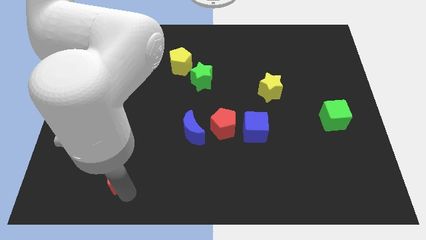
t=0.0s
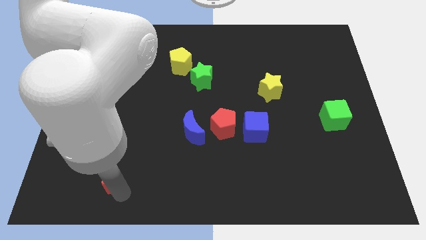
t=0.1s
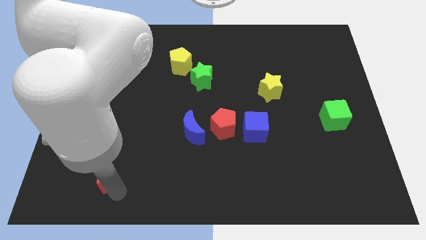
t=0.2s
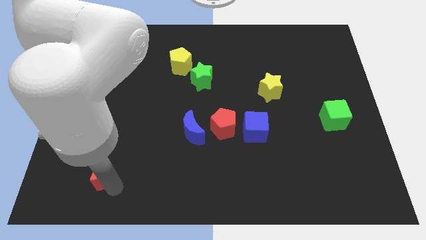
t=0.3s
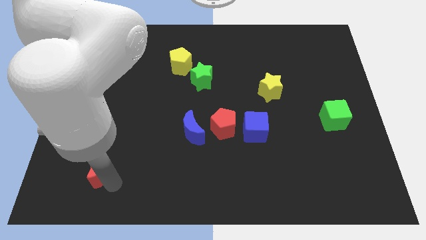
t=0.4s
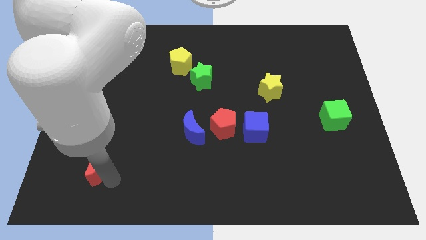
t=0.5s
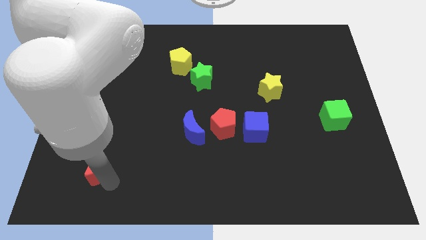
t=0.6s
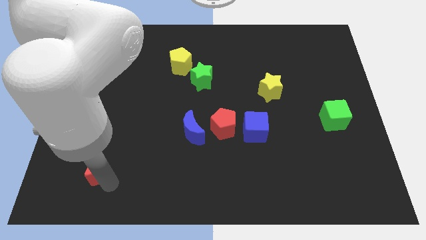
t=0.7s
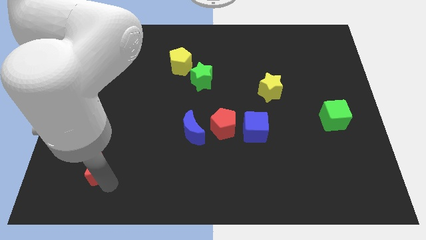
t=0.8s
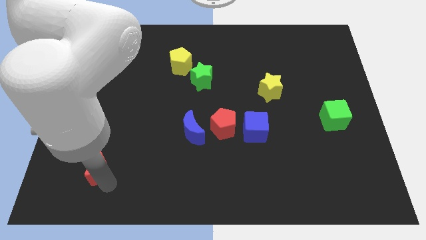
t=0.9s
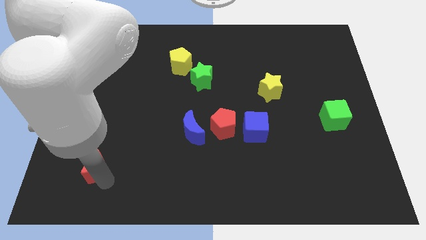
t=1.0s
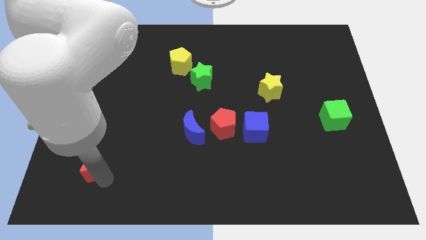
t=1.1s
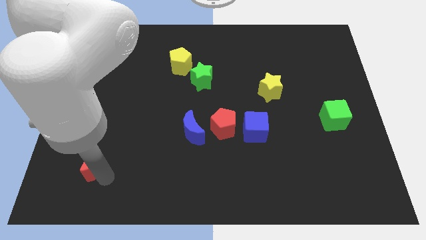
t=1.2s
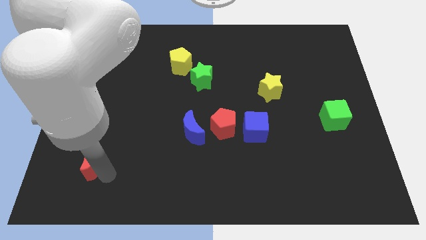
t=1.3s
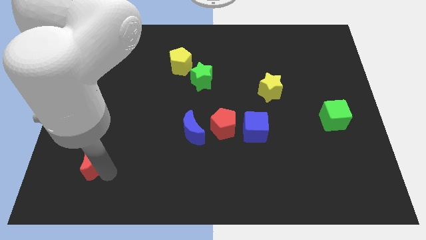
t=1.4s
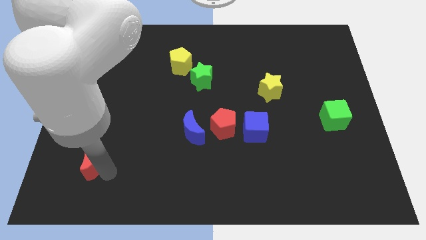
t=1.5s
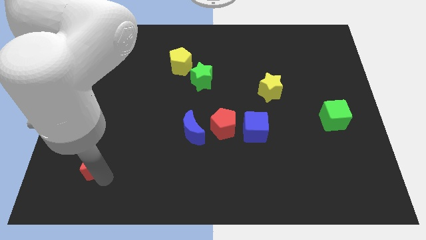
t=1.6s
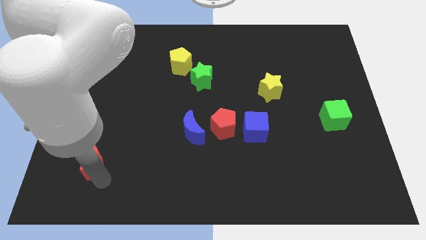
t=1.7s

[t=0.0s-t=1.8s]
move the red crescent to the left

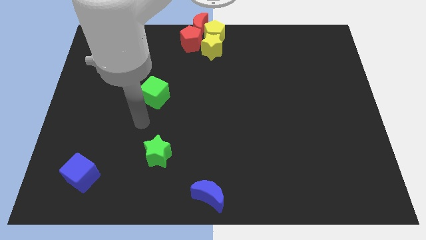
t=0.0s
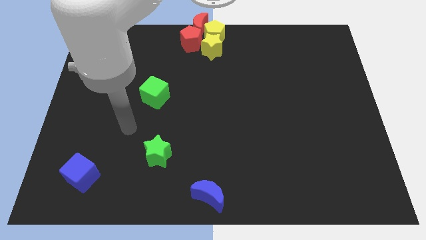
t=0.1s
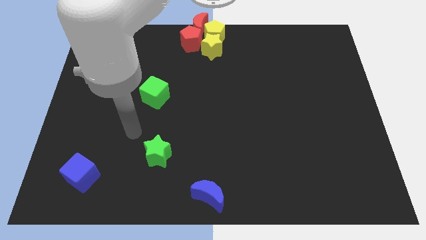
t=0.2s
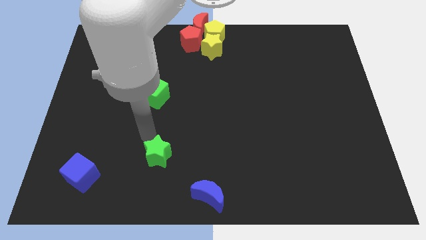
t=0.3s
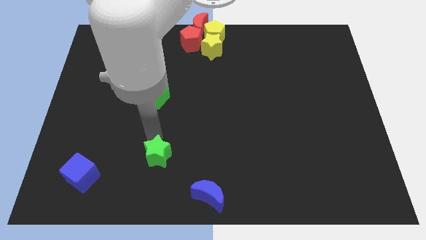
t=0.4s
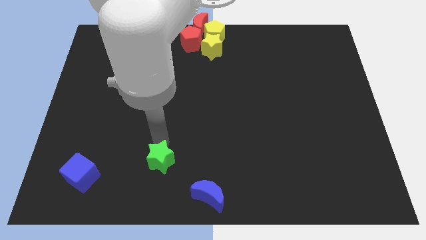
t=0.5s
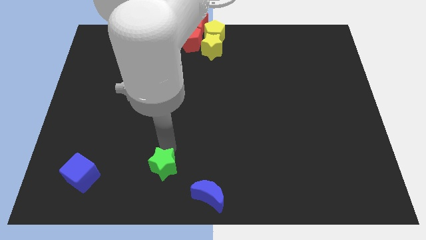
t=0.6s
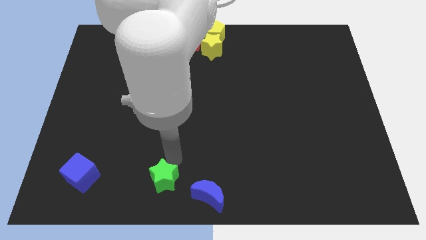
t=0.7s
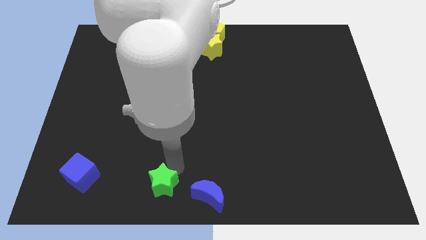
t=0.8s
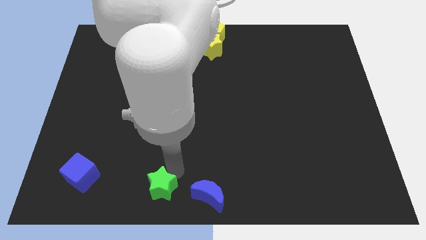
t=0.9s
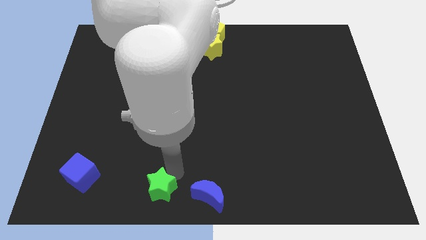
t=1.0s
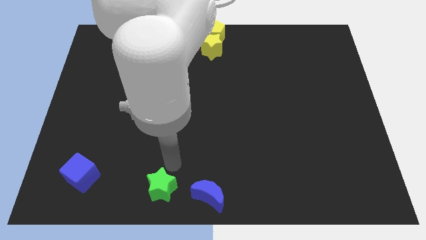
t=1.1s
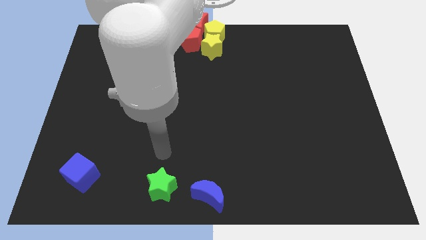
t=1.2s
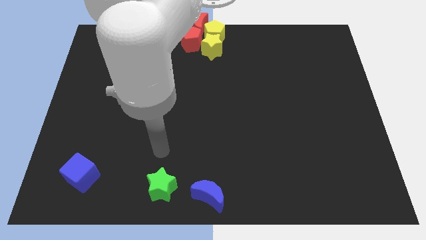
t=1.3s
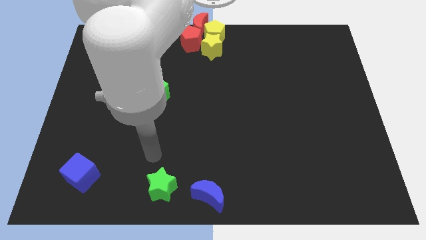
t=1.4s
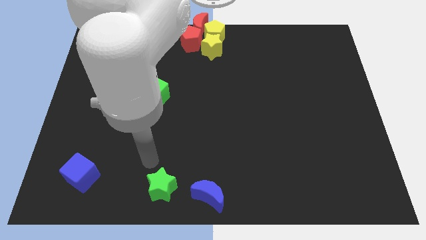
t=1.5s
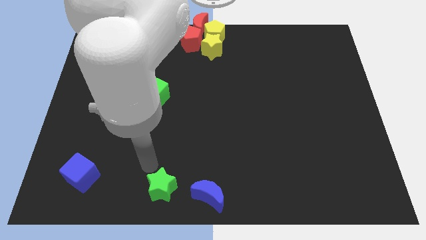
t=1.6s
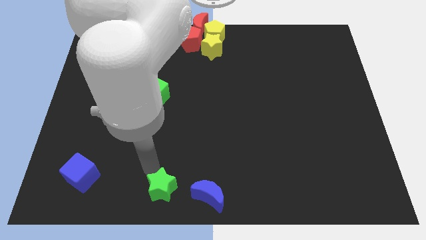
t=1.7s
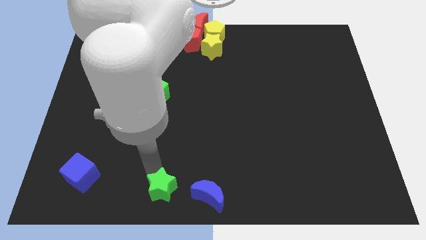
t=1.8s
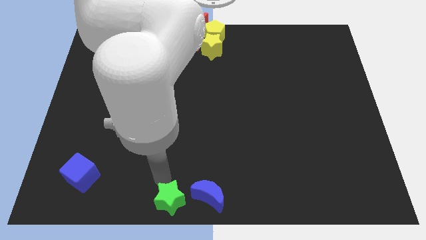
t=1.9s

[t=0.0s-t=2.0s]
place green star left to blue crescent

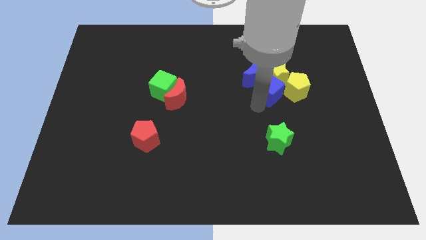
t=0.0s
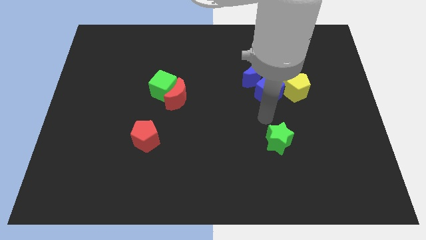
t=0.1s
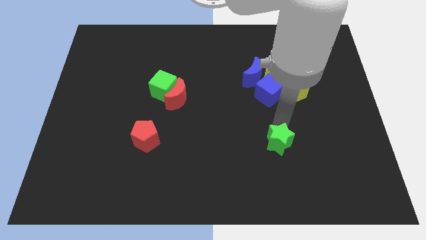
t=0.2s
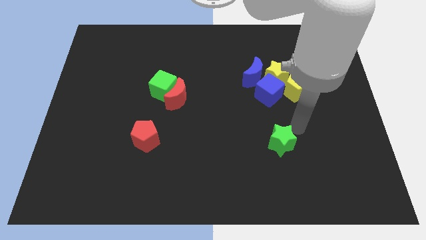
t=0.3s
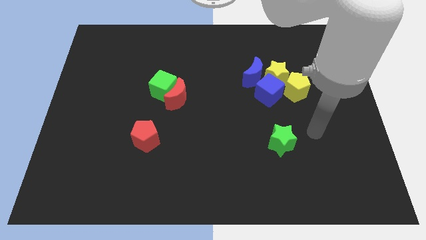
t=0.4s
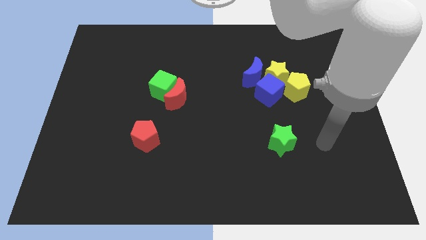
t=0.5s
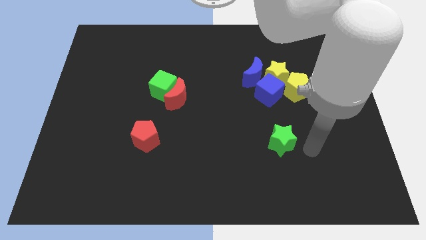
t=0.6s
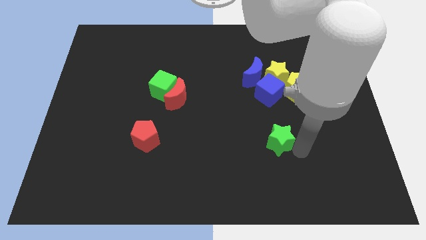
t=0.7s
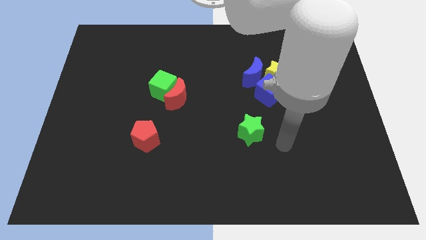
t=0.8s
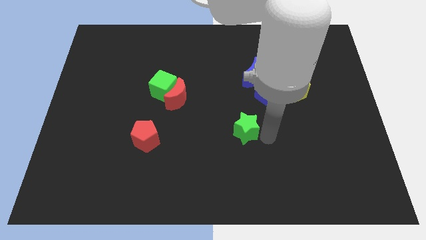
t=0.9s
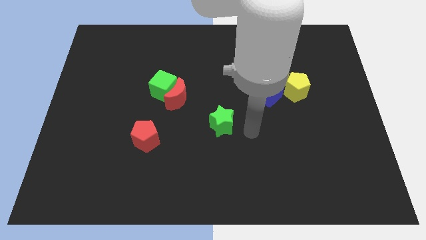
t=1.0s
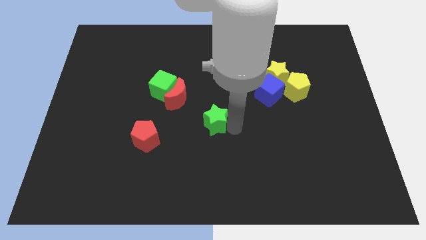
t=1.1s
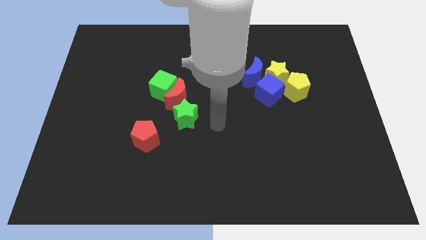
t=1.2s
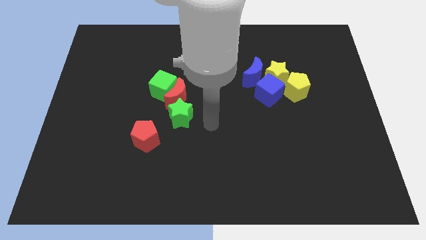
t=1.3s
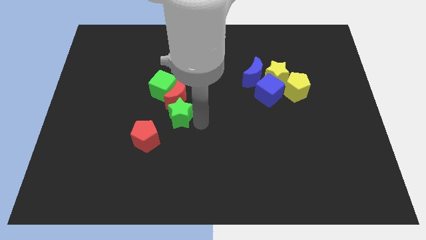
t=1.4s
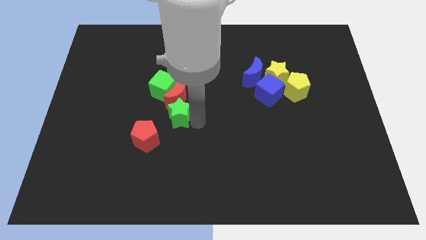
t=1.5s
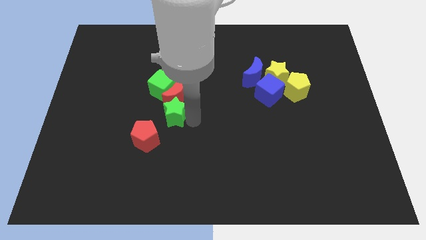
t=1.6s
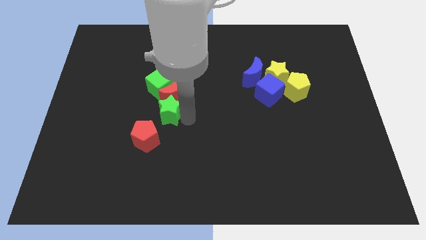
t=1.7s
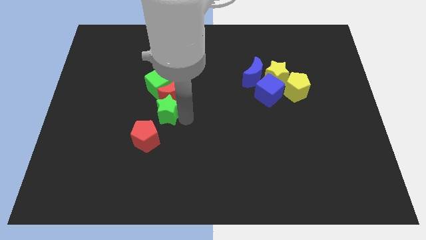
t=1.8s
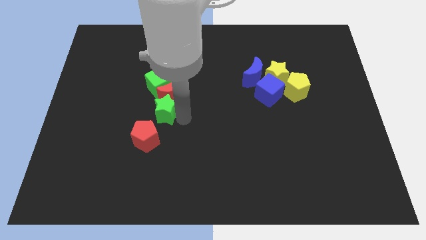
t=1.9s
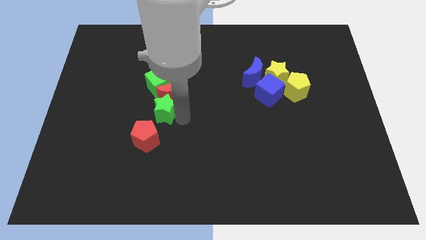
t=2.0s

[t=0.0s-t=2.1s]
place the green star near to the red moon

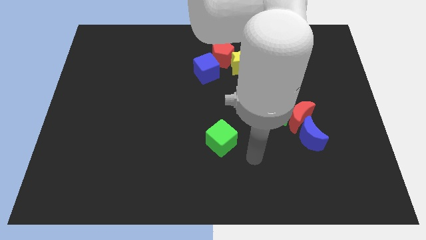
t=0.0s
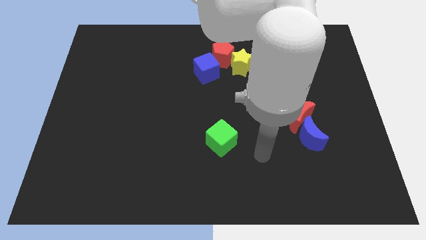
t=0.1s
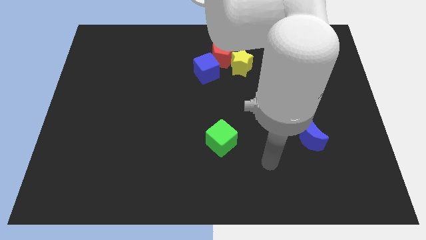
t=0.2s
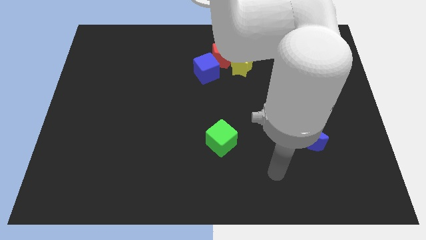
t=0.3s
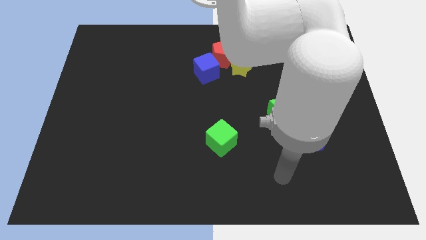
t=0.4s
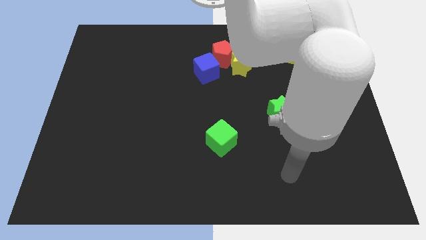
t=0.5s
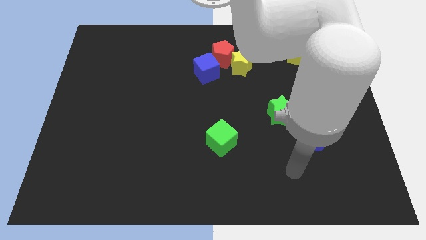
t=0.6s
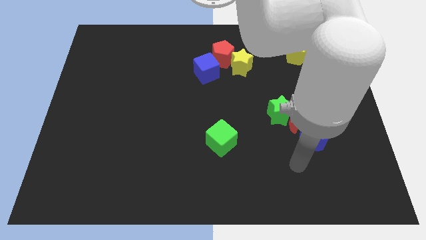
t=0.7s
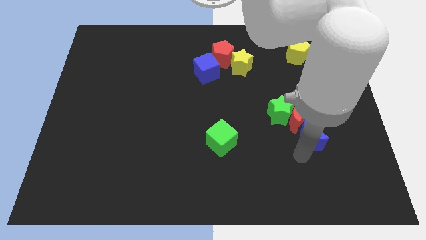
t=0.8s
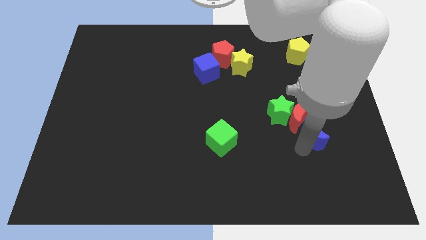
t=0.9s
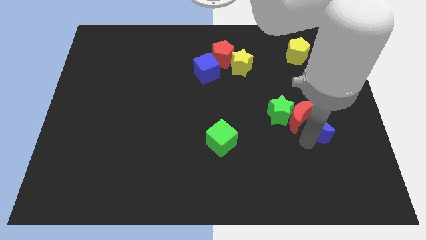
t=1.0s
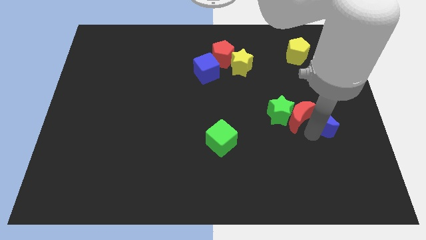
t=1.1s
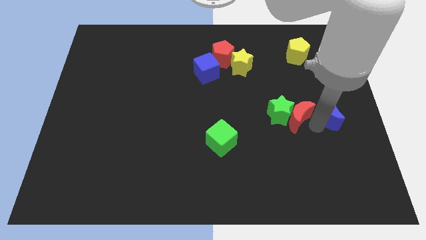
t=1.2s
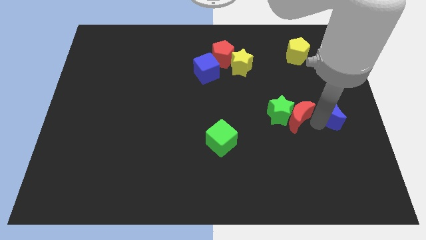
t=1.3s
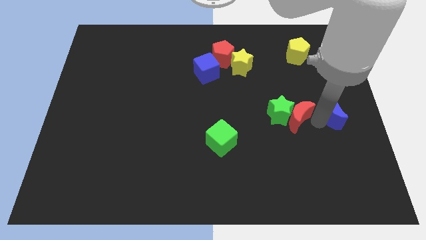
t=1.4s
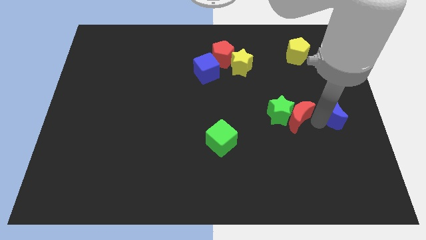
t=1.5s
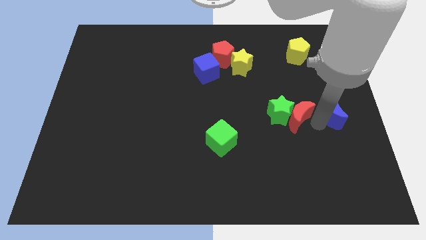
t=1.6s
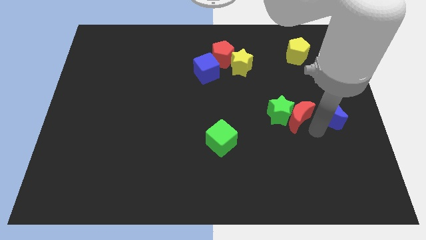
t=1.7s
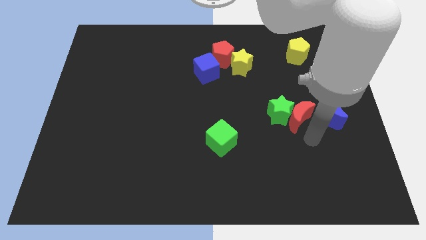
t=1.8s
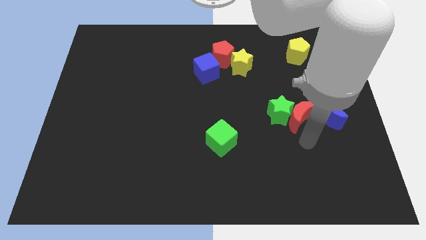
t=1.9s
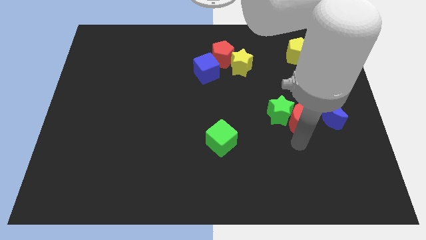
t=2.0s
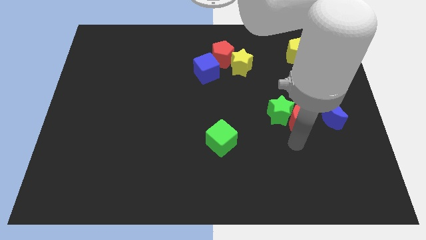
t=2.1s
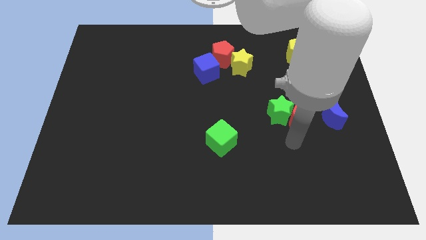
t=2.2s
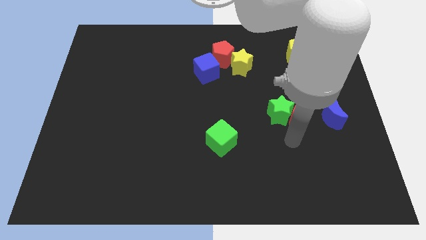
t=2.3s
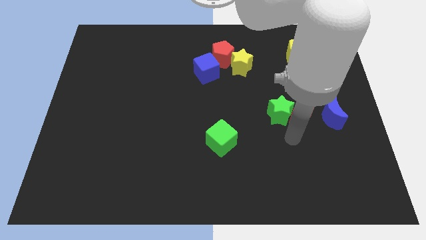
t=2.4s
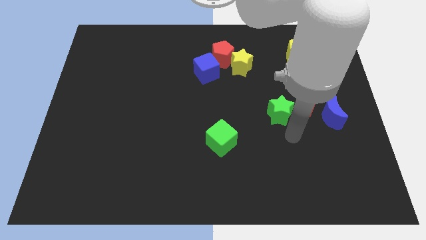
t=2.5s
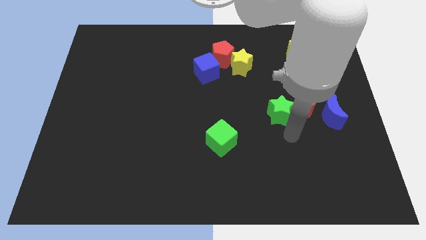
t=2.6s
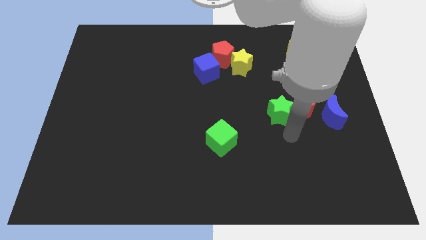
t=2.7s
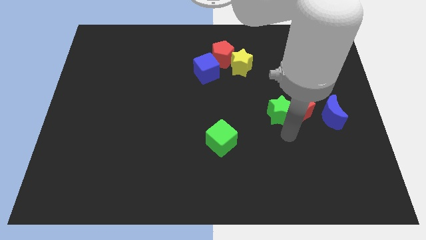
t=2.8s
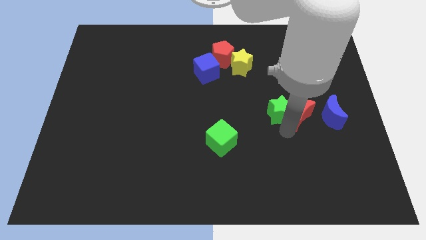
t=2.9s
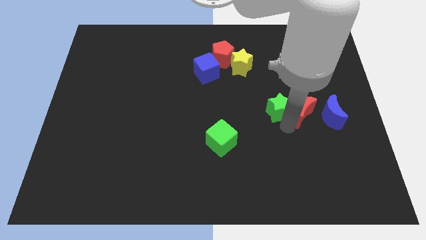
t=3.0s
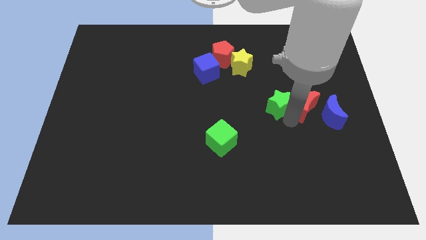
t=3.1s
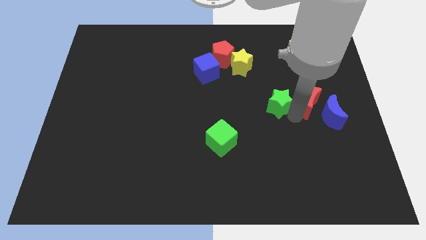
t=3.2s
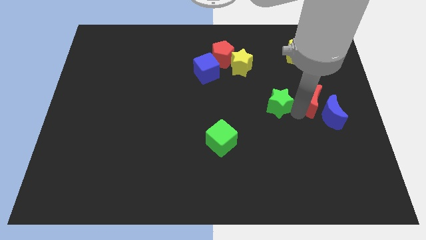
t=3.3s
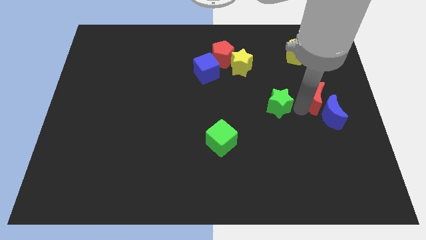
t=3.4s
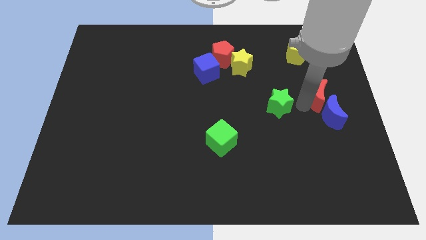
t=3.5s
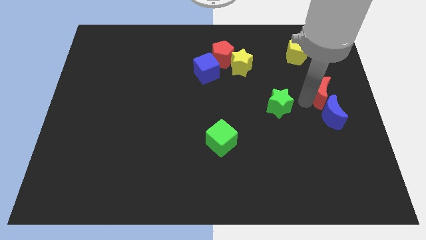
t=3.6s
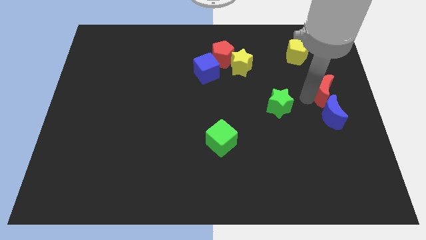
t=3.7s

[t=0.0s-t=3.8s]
push the red moon and blue moon to the center right
